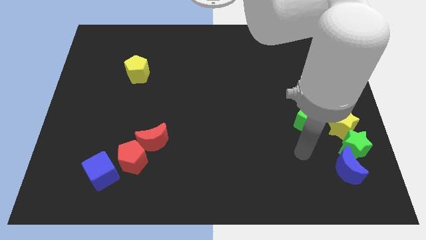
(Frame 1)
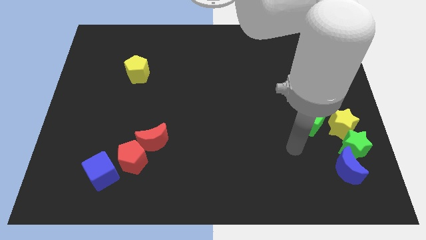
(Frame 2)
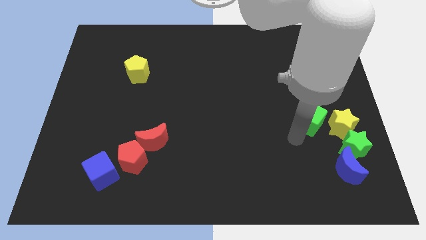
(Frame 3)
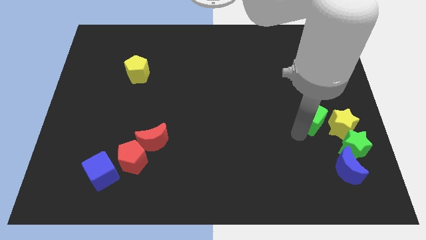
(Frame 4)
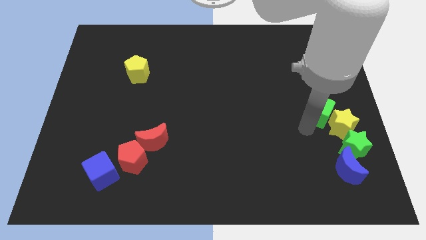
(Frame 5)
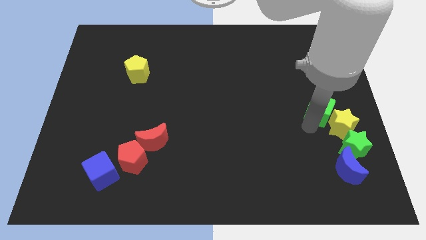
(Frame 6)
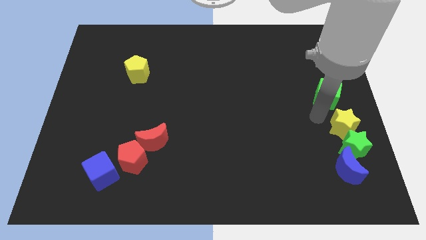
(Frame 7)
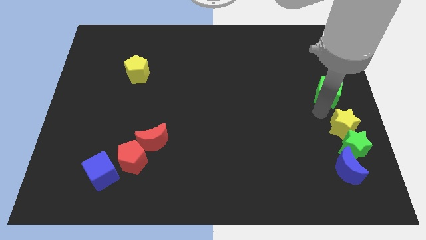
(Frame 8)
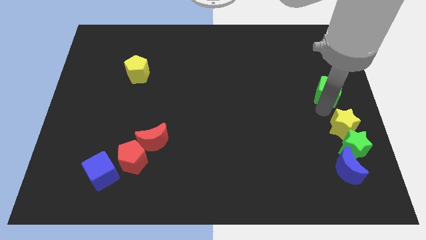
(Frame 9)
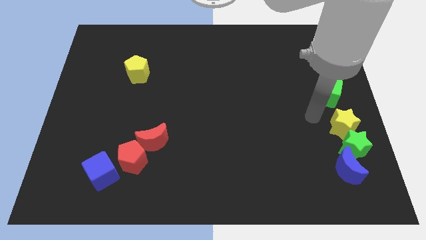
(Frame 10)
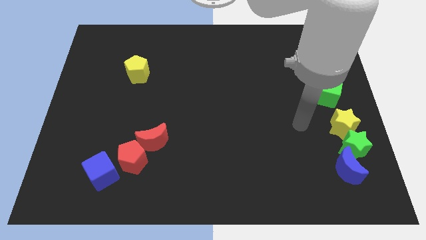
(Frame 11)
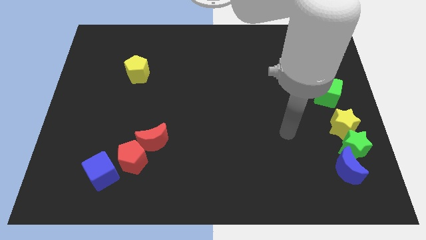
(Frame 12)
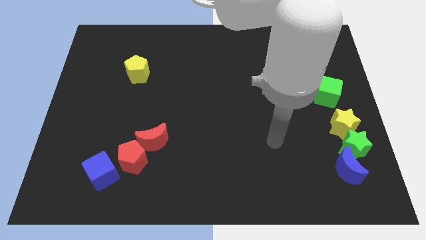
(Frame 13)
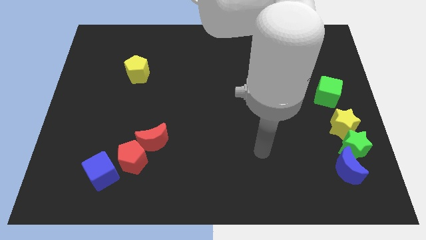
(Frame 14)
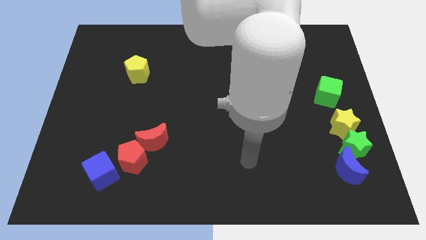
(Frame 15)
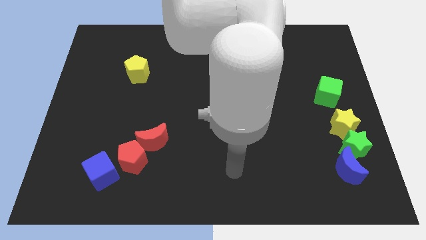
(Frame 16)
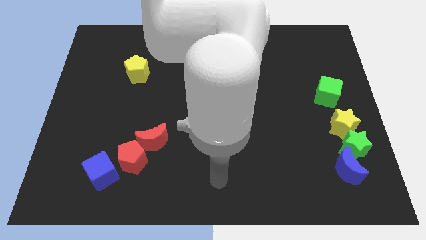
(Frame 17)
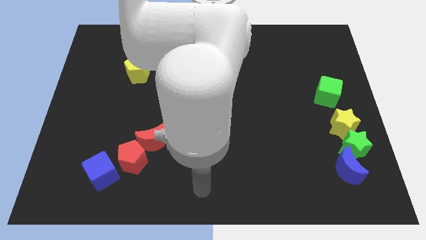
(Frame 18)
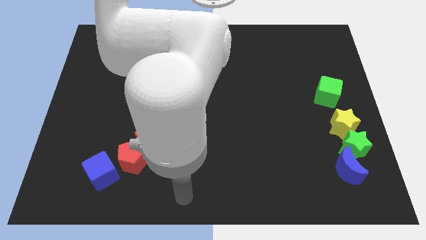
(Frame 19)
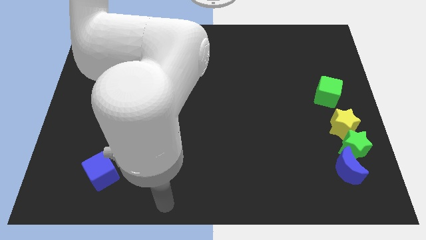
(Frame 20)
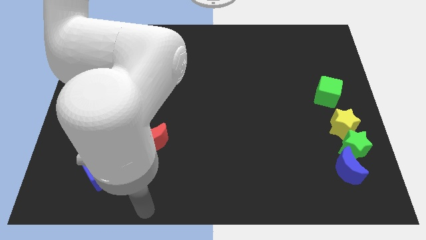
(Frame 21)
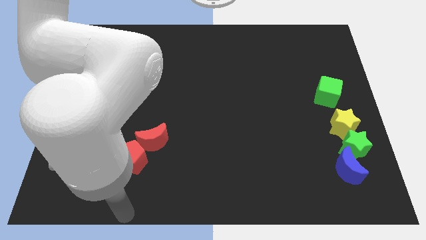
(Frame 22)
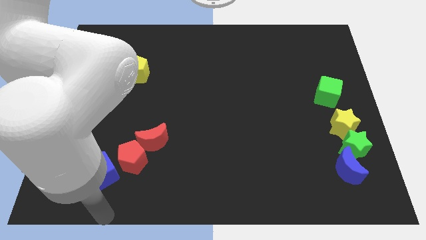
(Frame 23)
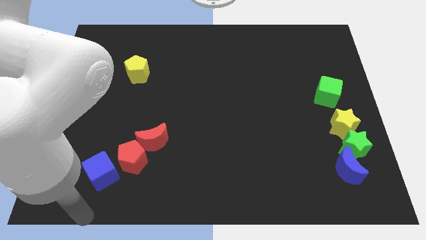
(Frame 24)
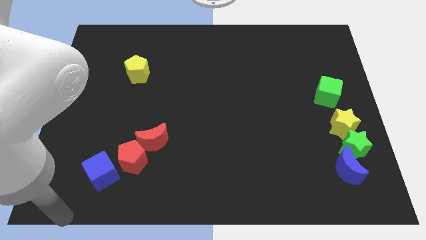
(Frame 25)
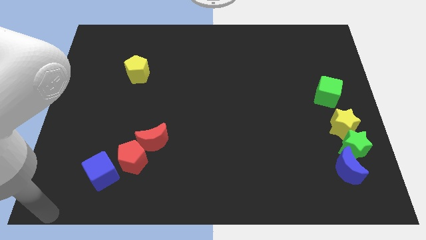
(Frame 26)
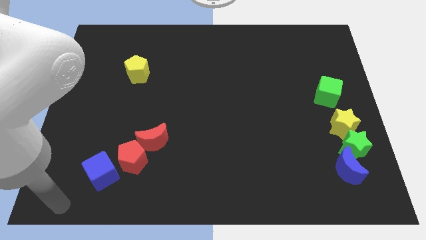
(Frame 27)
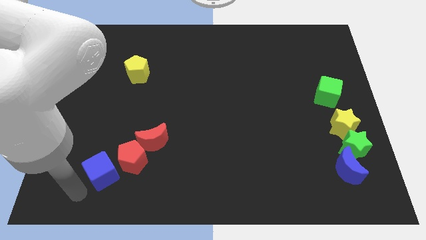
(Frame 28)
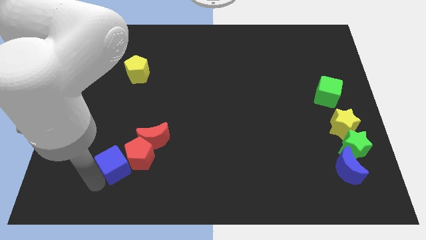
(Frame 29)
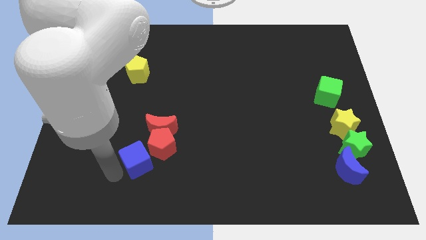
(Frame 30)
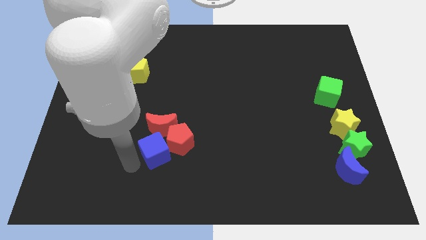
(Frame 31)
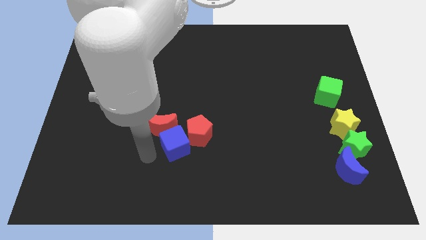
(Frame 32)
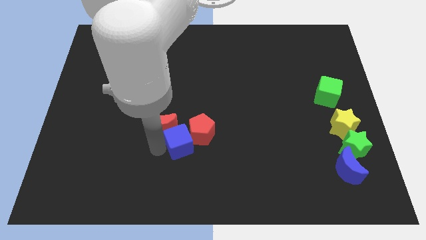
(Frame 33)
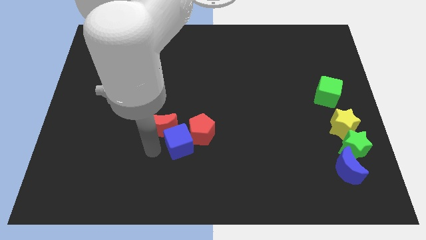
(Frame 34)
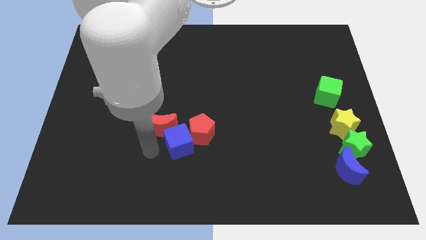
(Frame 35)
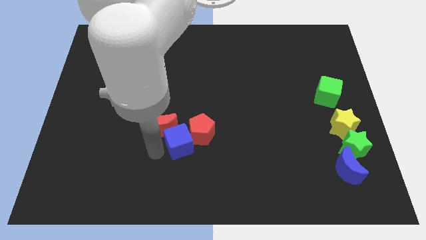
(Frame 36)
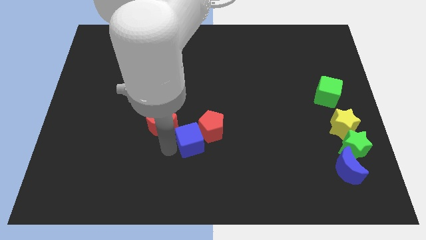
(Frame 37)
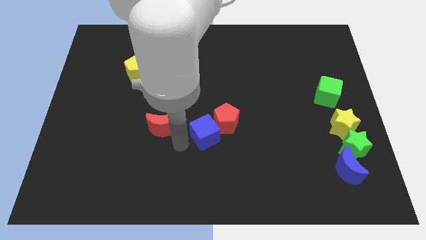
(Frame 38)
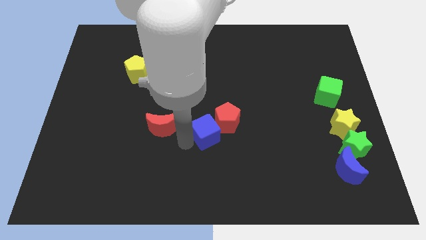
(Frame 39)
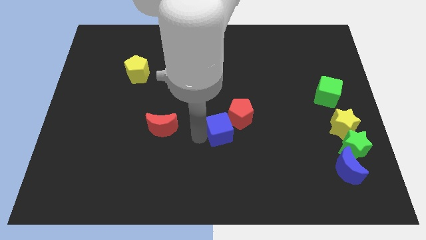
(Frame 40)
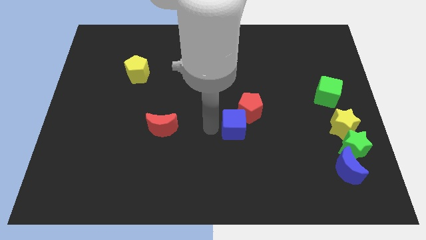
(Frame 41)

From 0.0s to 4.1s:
place the green cube on top of the yellow star

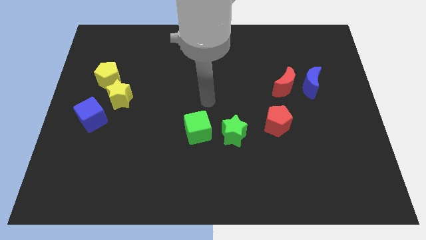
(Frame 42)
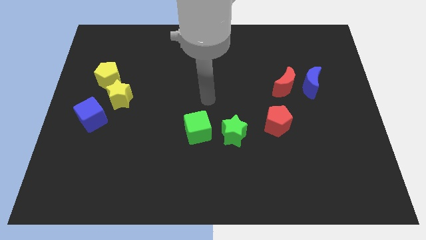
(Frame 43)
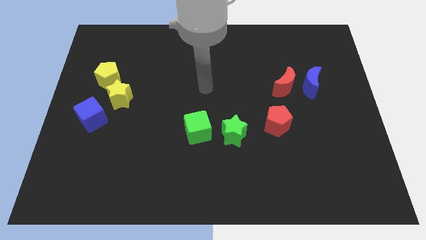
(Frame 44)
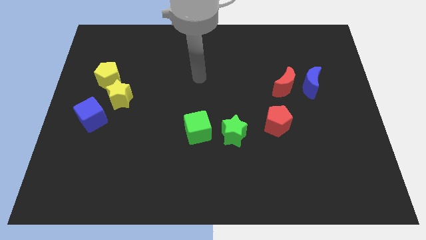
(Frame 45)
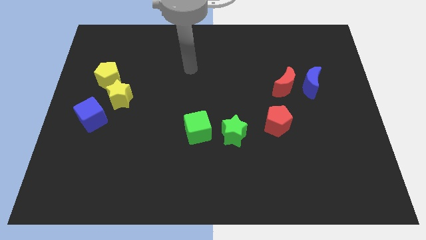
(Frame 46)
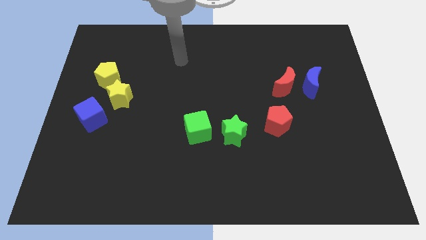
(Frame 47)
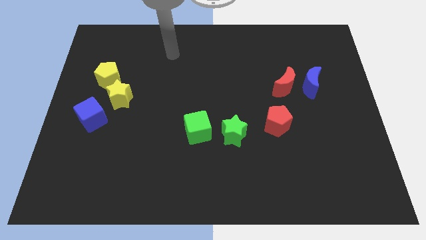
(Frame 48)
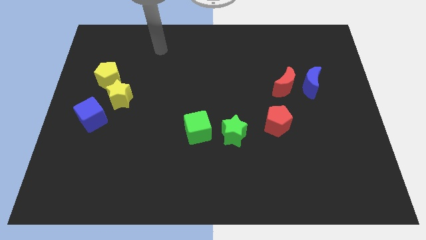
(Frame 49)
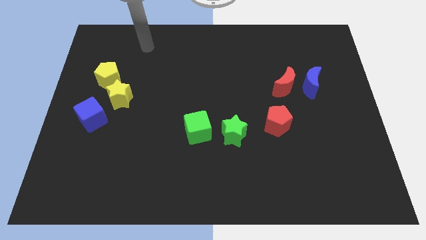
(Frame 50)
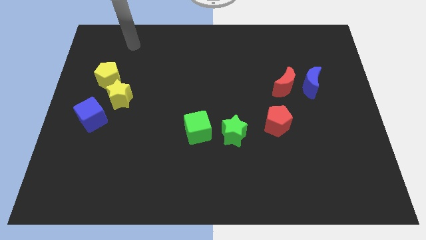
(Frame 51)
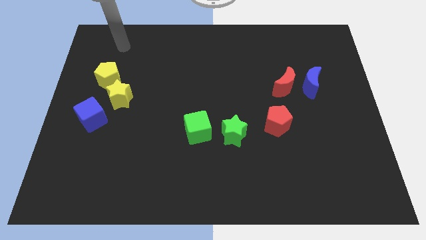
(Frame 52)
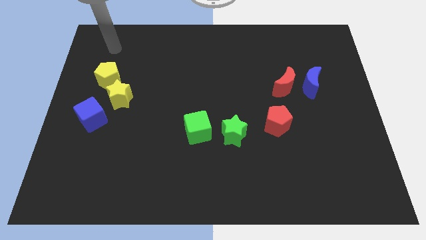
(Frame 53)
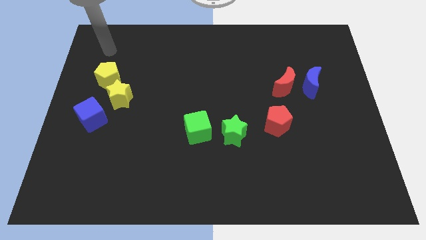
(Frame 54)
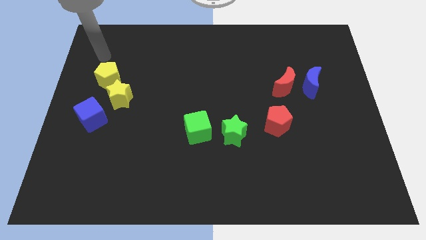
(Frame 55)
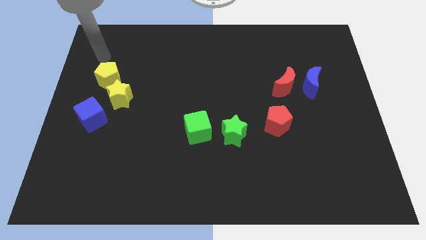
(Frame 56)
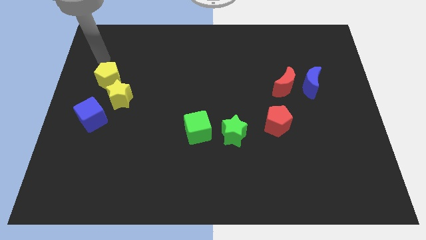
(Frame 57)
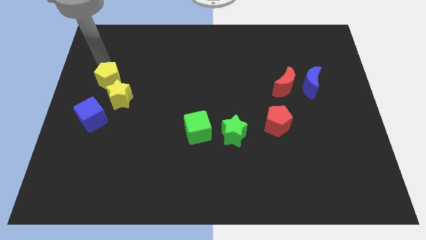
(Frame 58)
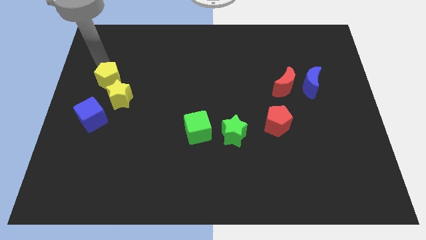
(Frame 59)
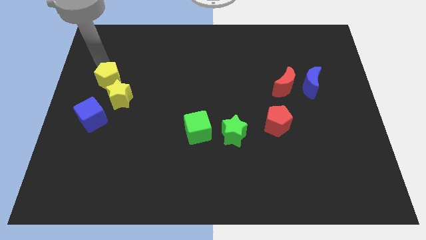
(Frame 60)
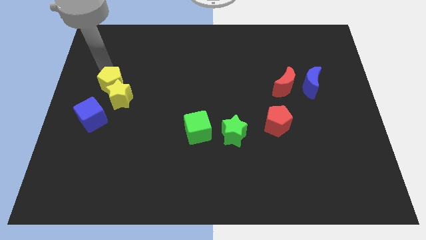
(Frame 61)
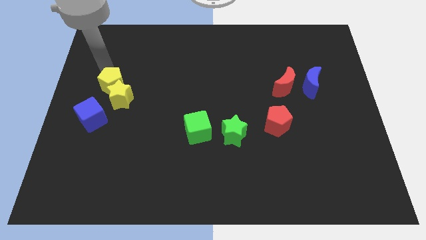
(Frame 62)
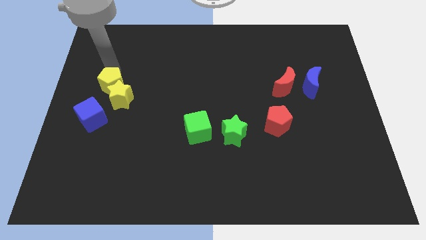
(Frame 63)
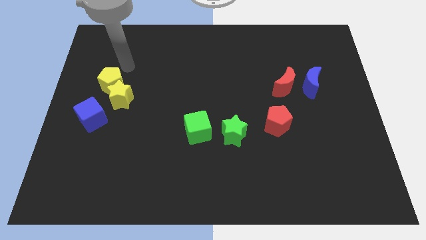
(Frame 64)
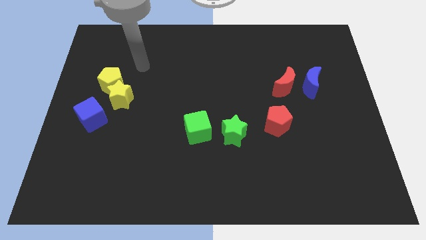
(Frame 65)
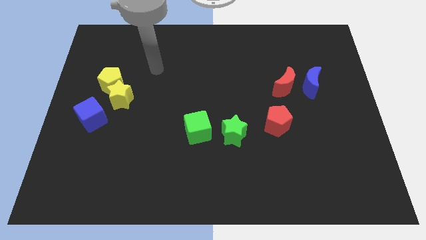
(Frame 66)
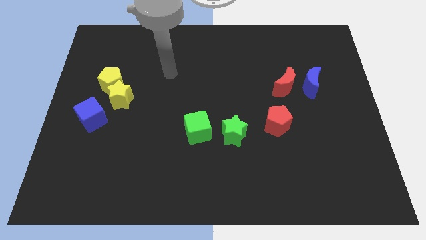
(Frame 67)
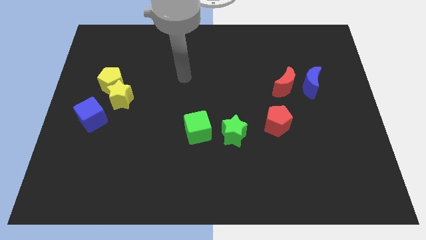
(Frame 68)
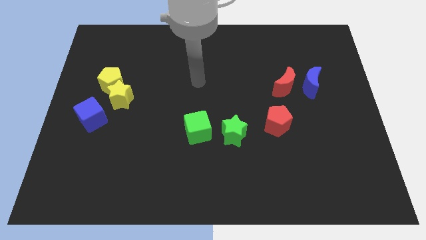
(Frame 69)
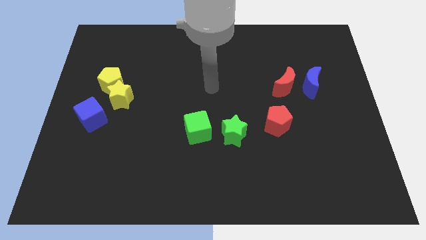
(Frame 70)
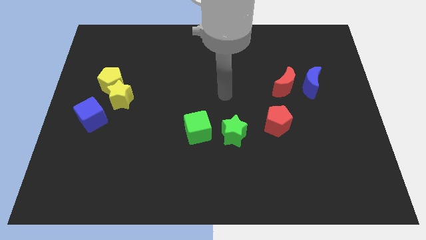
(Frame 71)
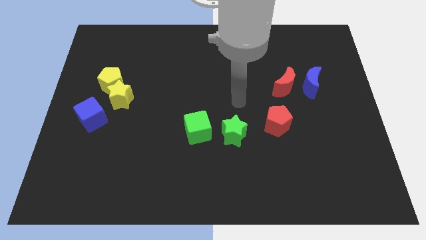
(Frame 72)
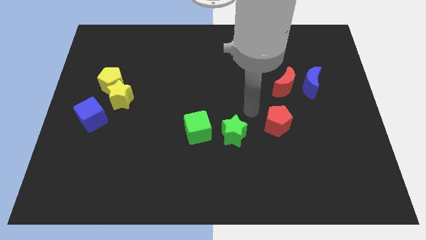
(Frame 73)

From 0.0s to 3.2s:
push the yellow pentagon into the yellow star

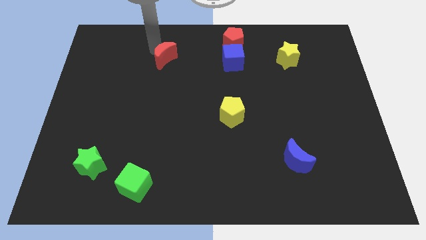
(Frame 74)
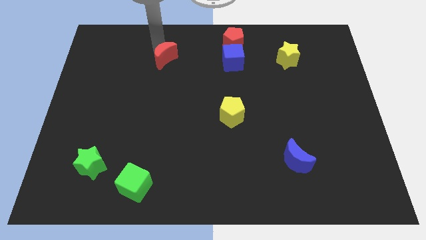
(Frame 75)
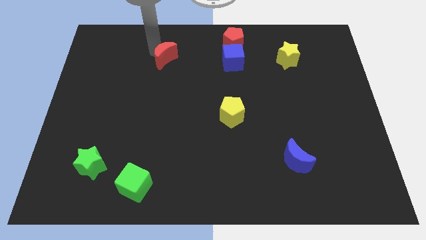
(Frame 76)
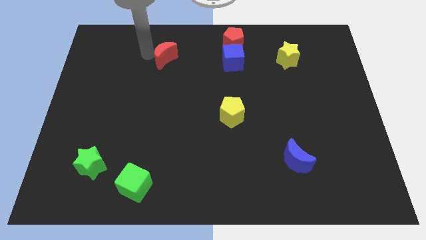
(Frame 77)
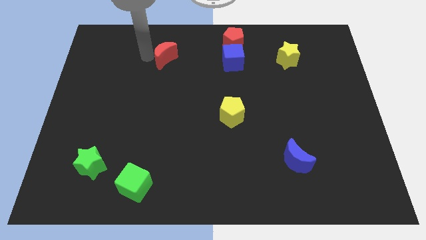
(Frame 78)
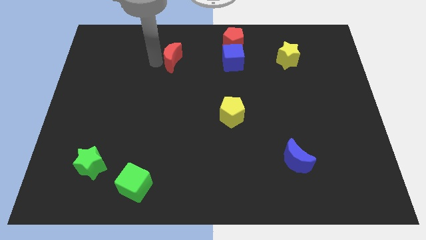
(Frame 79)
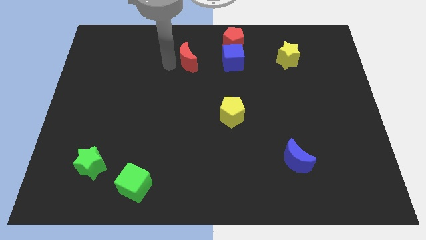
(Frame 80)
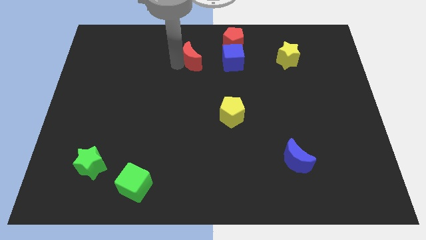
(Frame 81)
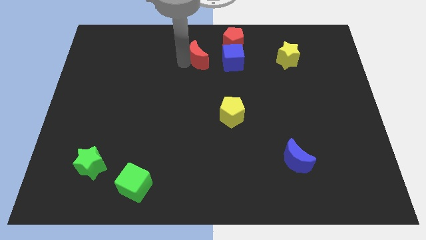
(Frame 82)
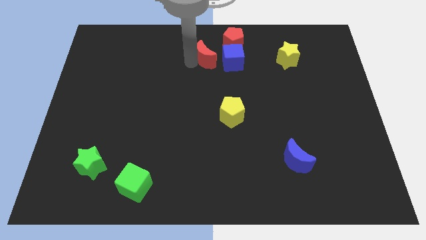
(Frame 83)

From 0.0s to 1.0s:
place blue moon left to blue cube

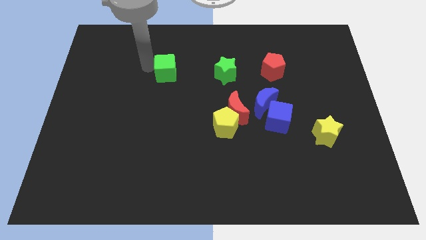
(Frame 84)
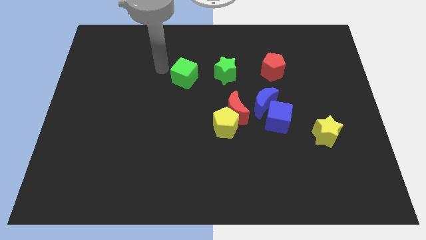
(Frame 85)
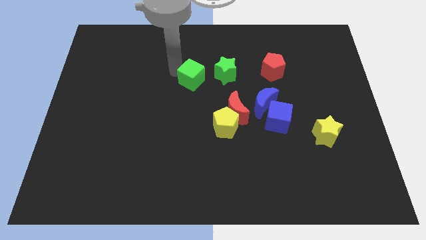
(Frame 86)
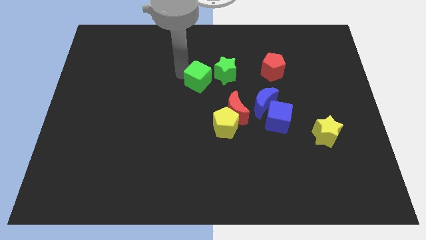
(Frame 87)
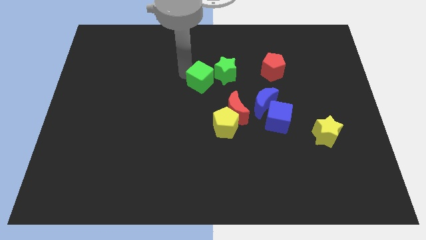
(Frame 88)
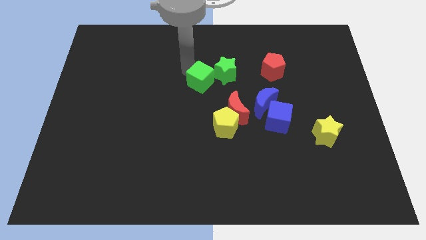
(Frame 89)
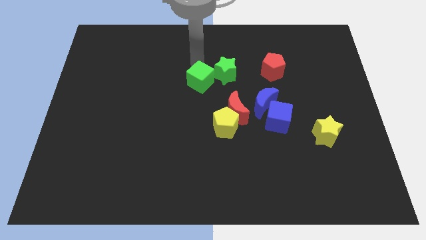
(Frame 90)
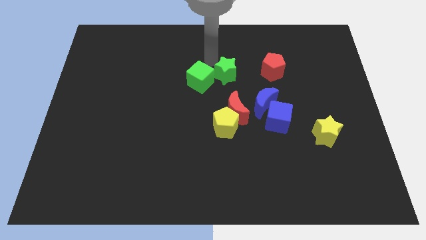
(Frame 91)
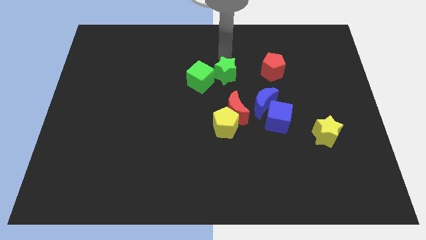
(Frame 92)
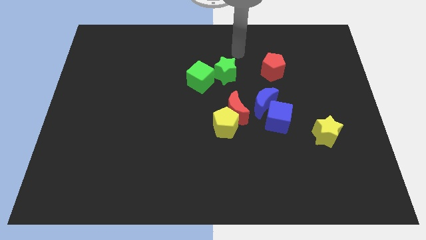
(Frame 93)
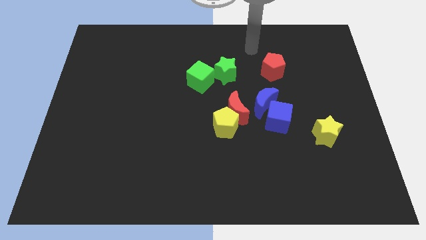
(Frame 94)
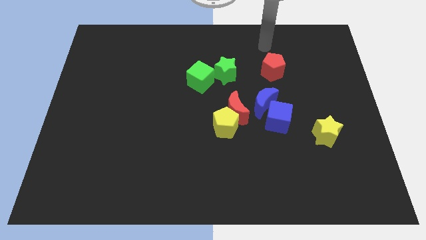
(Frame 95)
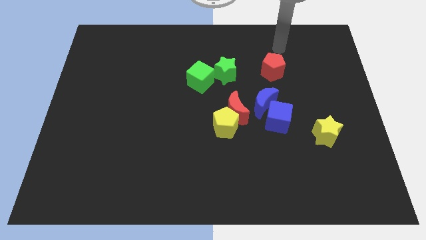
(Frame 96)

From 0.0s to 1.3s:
move the green cube to the left of the green star
